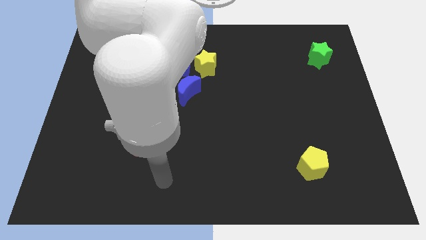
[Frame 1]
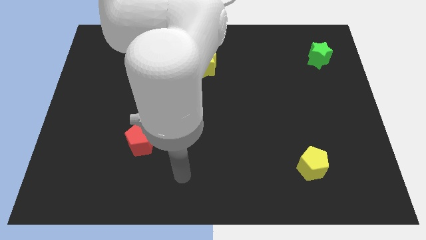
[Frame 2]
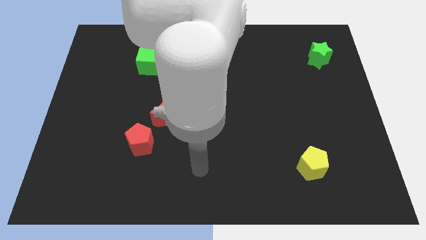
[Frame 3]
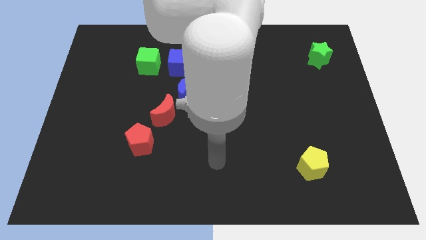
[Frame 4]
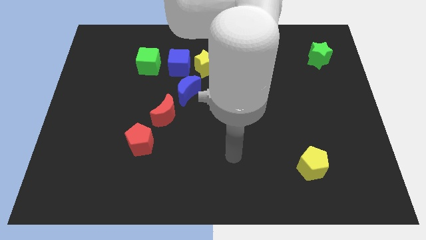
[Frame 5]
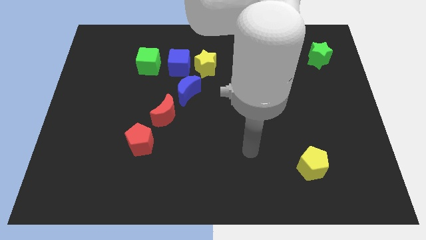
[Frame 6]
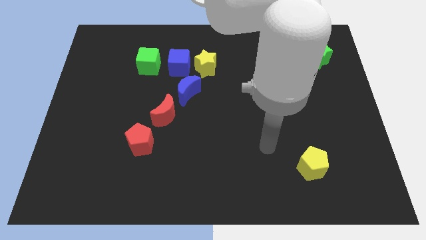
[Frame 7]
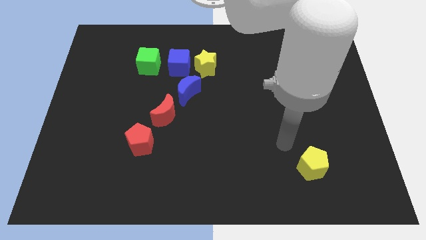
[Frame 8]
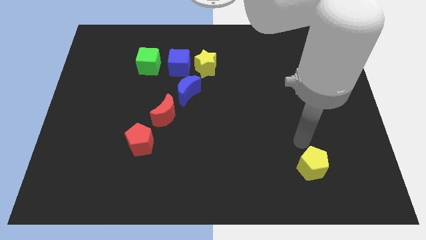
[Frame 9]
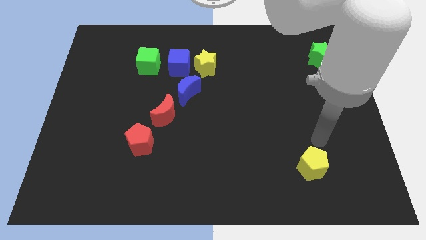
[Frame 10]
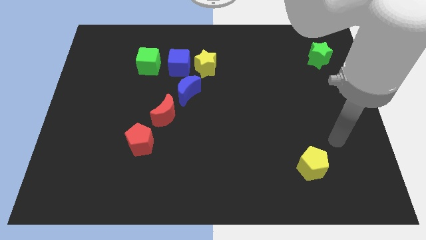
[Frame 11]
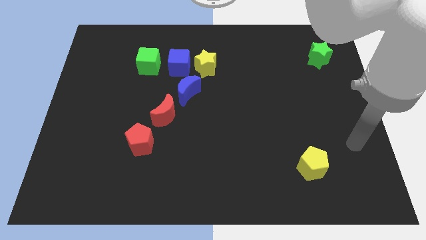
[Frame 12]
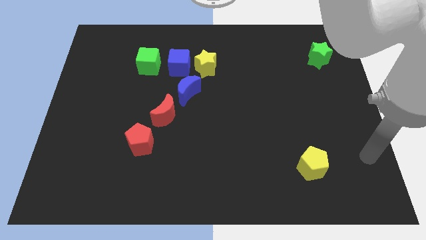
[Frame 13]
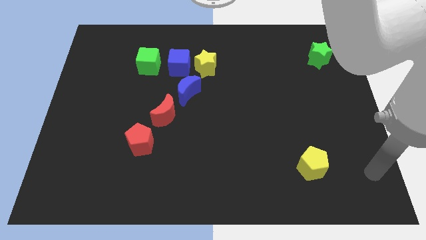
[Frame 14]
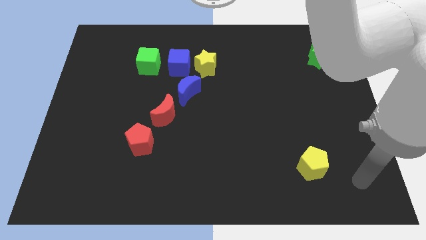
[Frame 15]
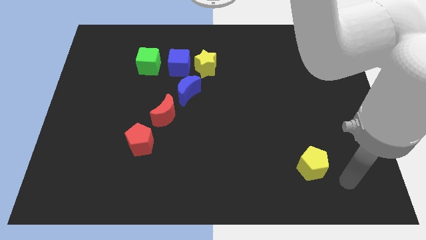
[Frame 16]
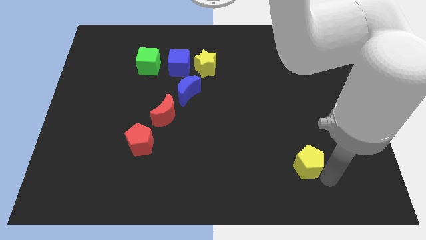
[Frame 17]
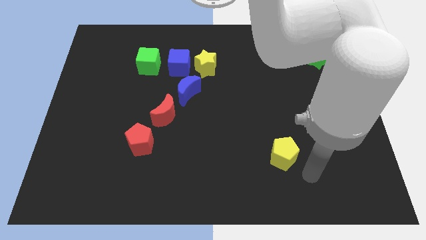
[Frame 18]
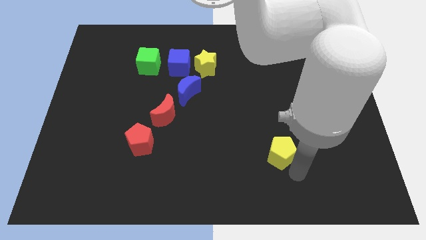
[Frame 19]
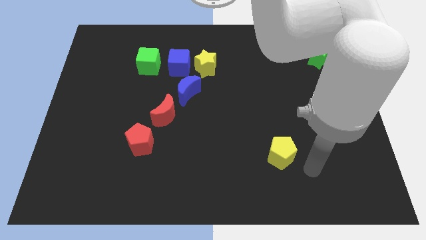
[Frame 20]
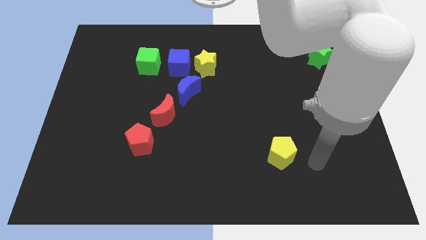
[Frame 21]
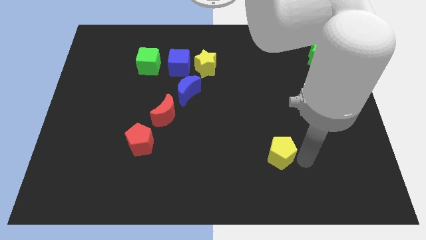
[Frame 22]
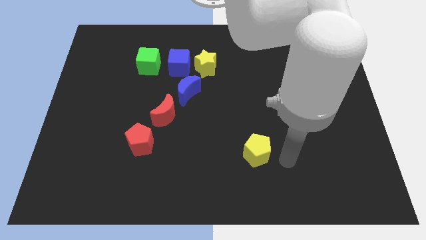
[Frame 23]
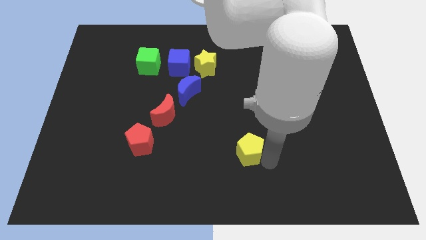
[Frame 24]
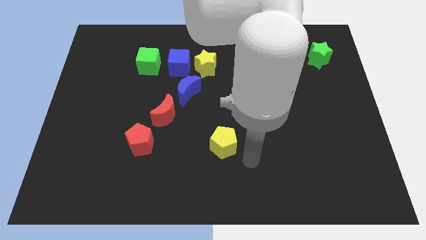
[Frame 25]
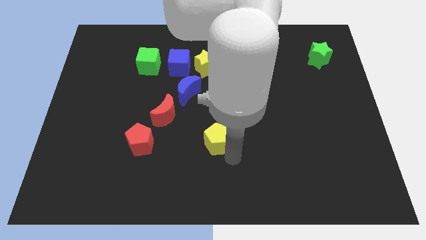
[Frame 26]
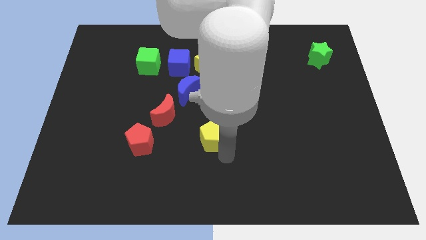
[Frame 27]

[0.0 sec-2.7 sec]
place the yellow pentagon right to the red pentagon

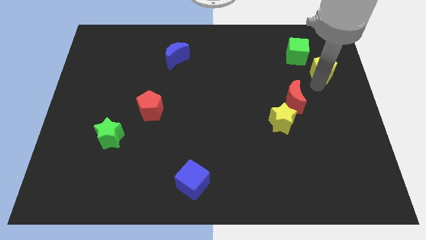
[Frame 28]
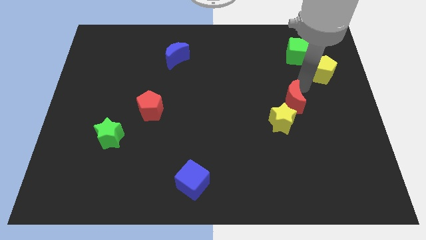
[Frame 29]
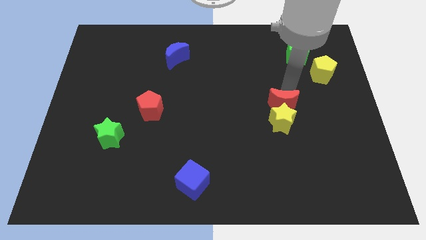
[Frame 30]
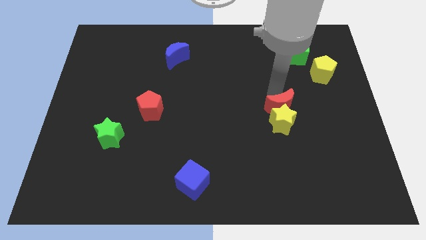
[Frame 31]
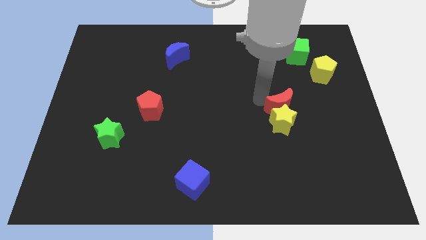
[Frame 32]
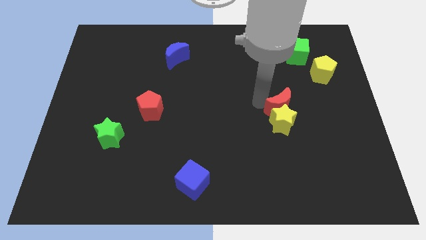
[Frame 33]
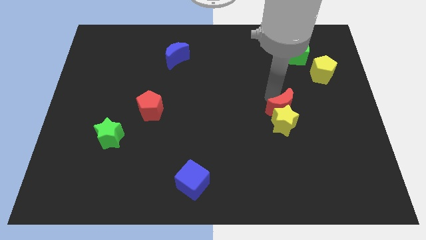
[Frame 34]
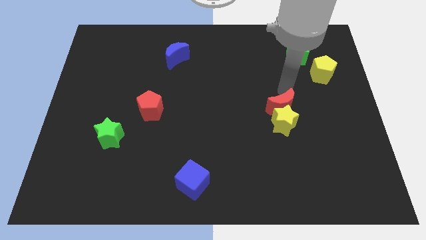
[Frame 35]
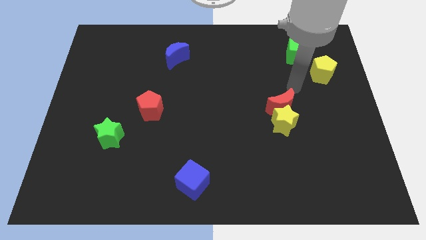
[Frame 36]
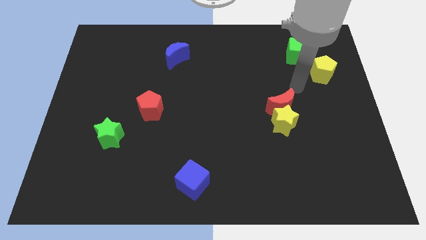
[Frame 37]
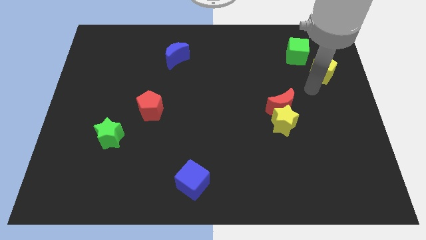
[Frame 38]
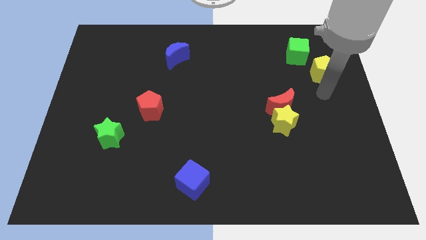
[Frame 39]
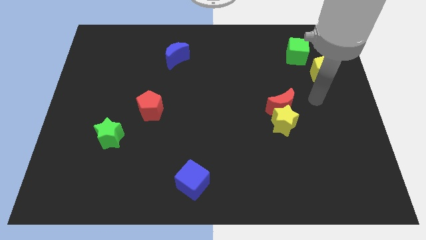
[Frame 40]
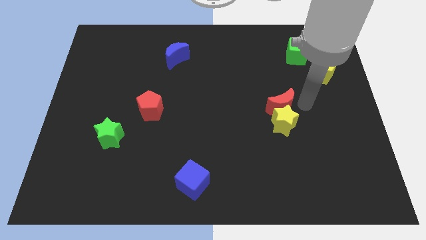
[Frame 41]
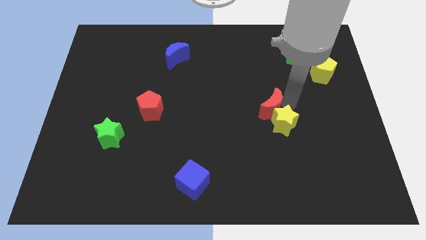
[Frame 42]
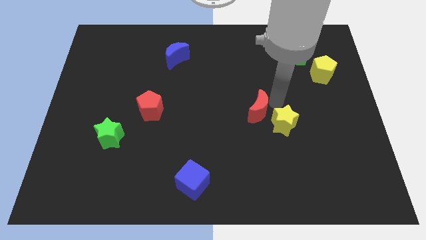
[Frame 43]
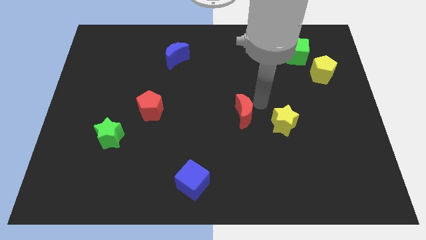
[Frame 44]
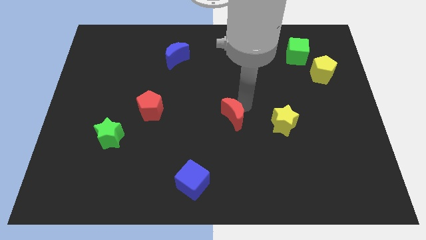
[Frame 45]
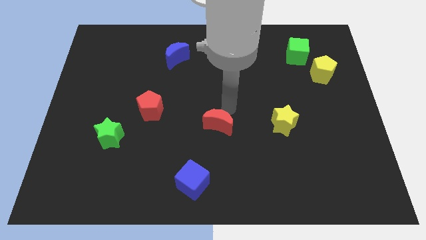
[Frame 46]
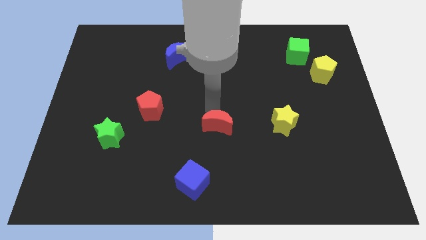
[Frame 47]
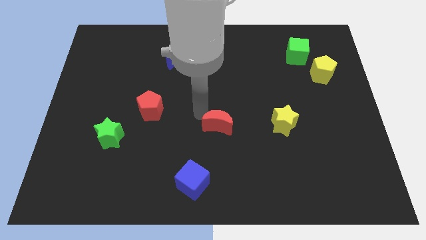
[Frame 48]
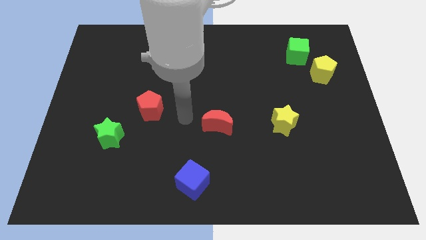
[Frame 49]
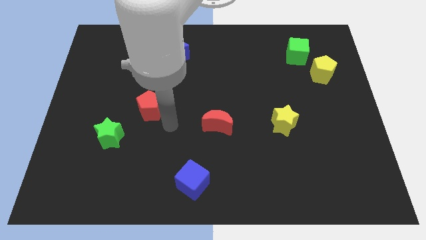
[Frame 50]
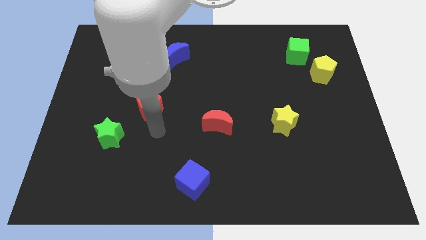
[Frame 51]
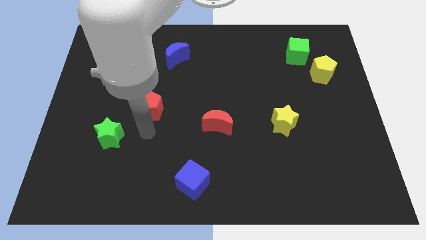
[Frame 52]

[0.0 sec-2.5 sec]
move the red crescent to the center of the board

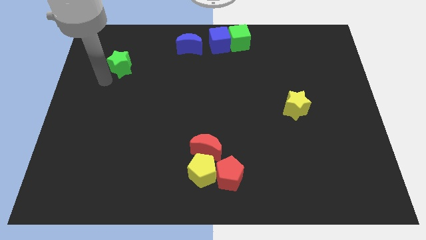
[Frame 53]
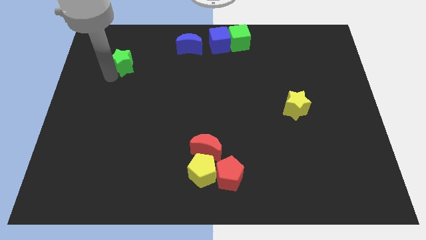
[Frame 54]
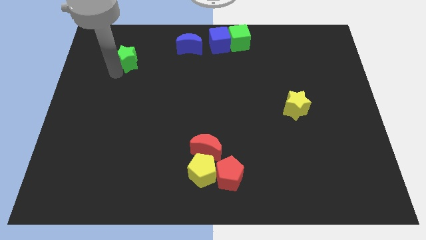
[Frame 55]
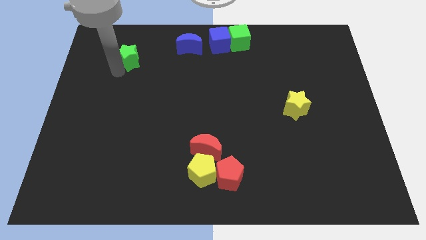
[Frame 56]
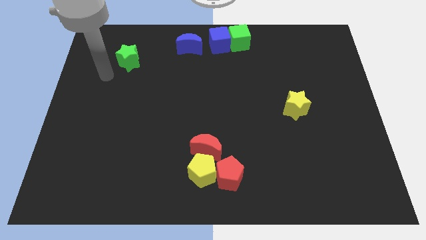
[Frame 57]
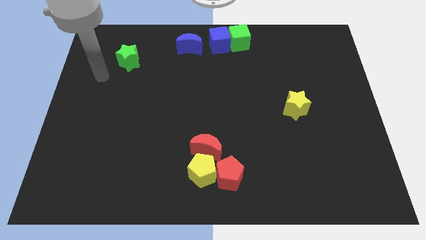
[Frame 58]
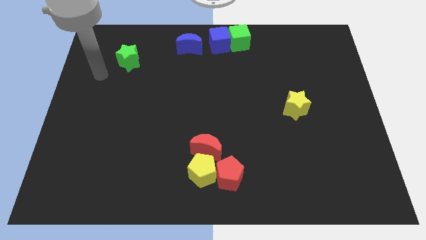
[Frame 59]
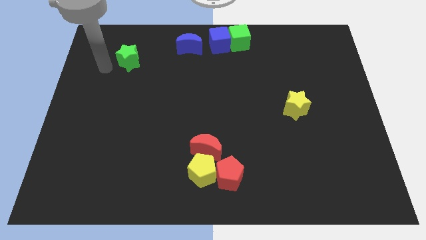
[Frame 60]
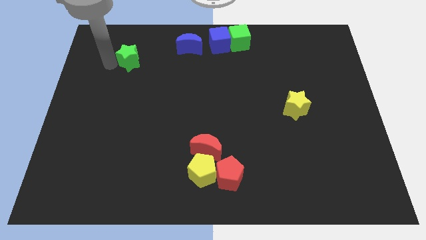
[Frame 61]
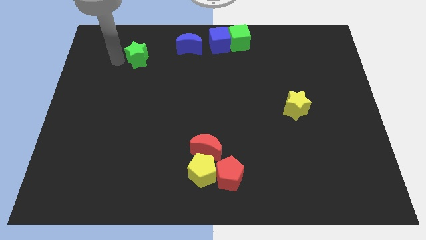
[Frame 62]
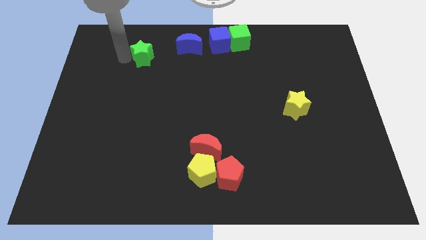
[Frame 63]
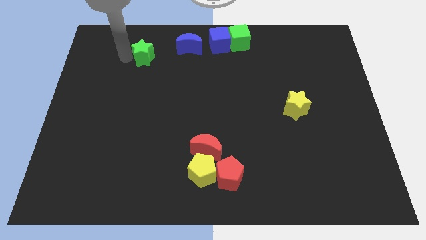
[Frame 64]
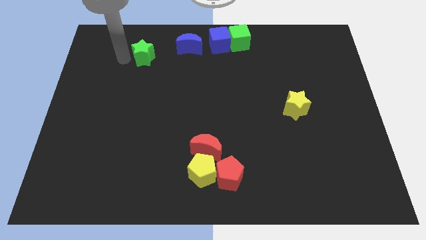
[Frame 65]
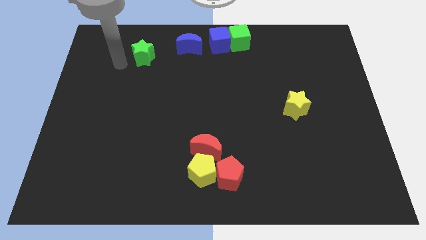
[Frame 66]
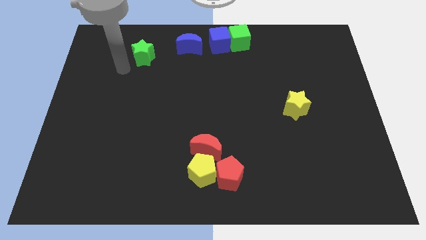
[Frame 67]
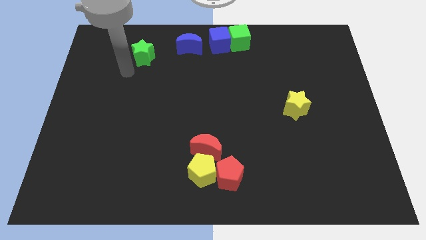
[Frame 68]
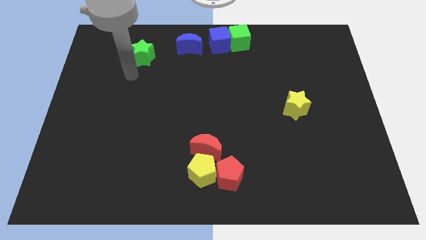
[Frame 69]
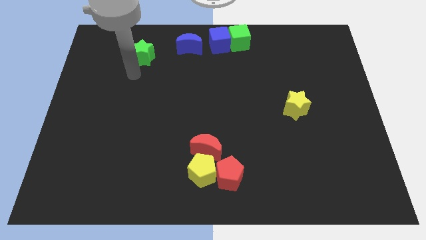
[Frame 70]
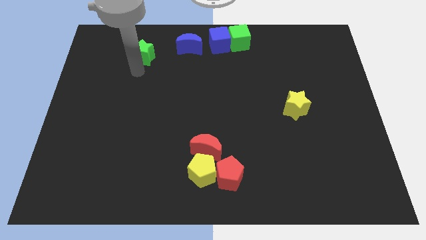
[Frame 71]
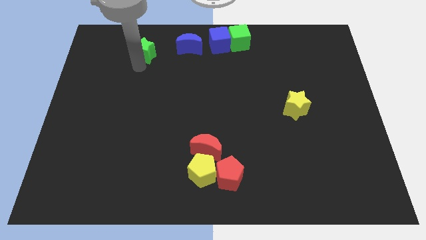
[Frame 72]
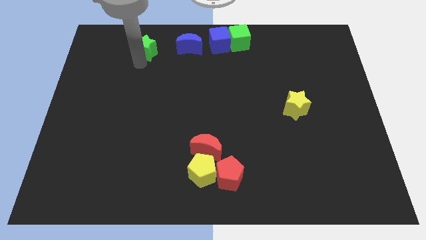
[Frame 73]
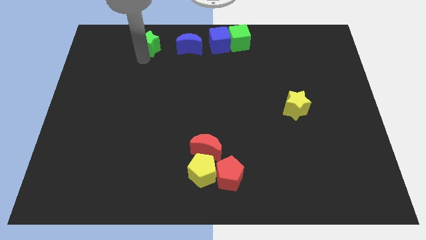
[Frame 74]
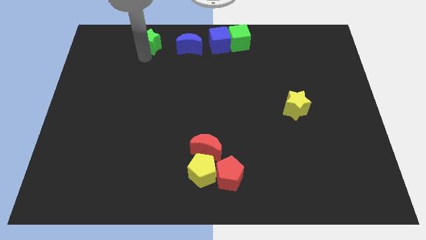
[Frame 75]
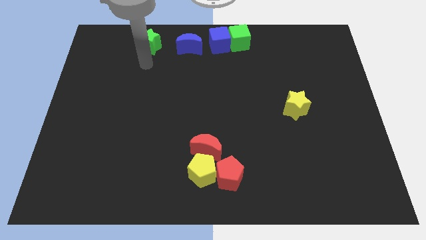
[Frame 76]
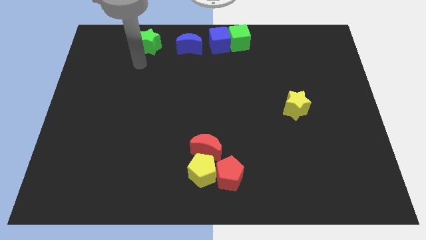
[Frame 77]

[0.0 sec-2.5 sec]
push the green star to the left side of the blue moon

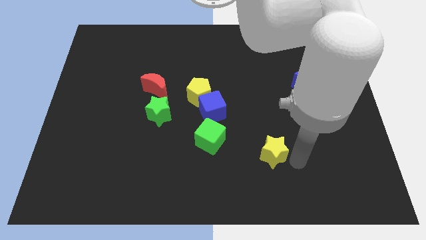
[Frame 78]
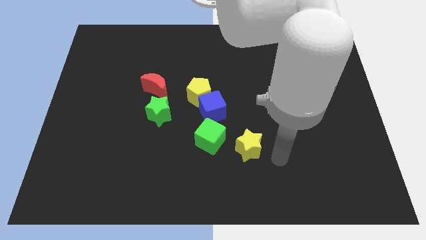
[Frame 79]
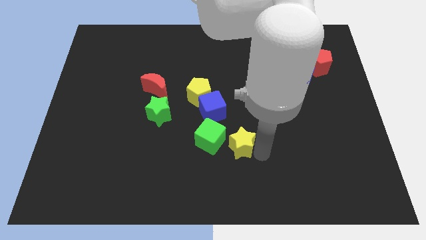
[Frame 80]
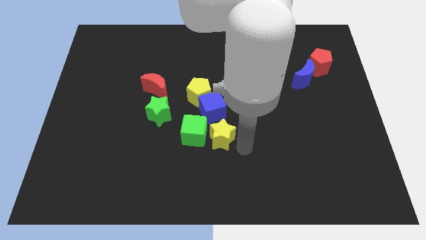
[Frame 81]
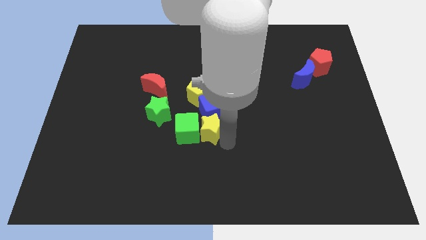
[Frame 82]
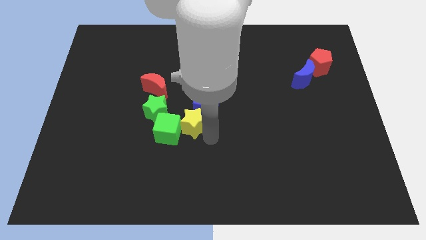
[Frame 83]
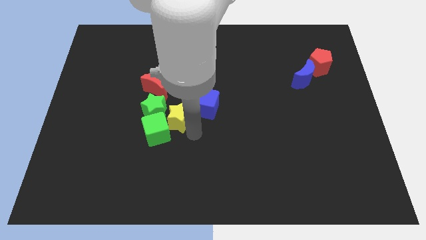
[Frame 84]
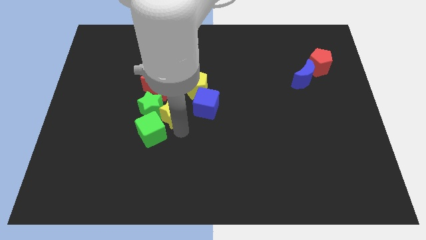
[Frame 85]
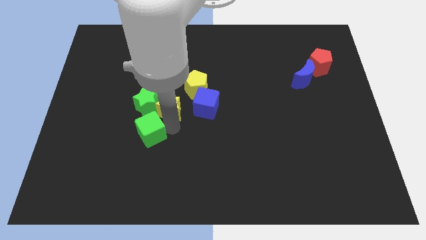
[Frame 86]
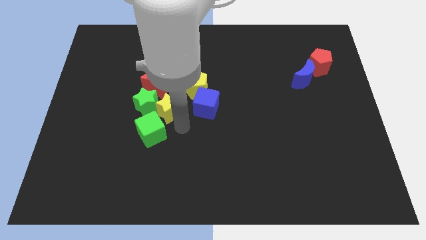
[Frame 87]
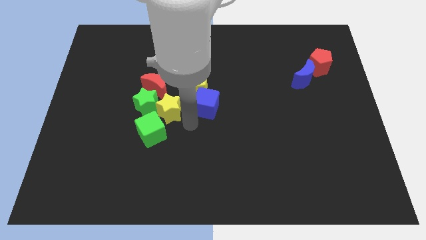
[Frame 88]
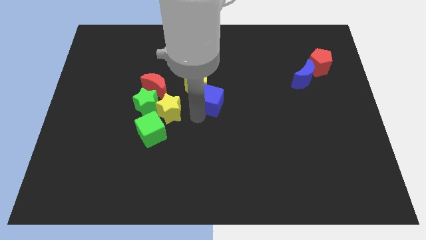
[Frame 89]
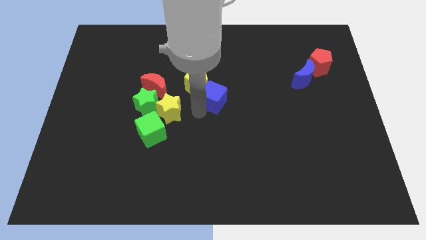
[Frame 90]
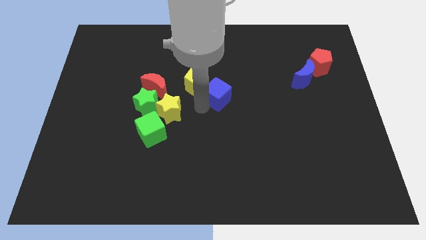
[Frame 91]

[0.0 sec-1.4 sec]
push the yellow star into the green cube
